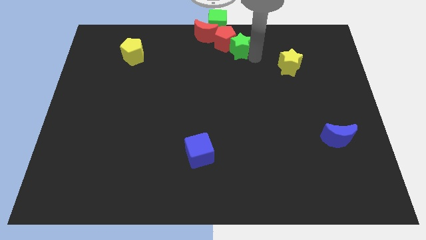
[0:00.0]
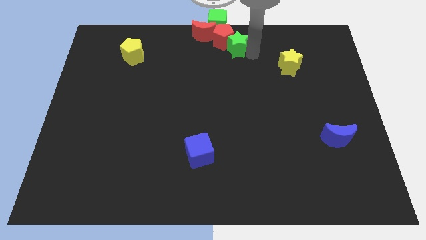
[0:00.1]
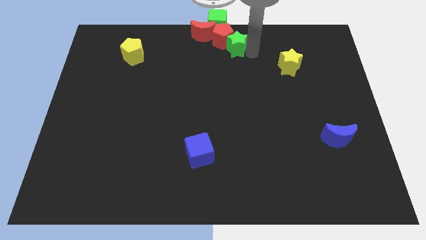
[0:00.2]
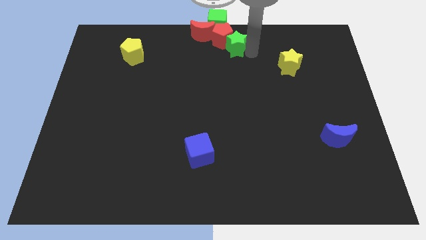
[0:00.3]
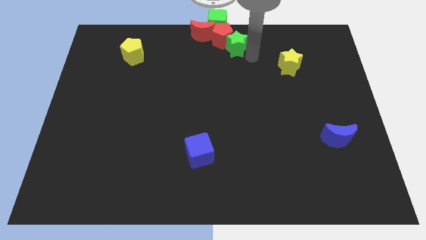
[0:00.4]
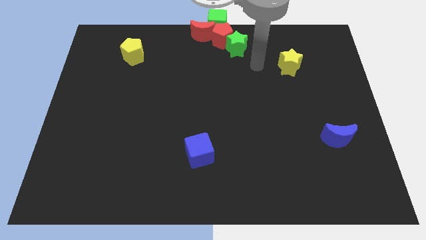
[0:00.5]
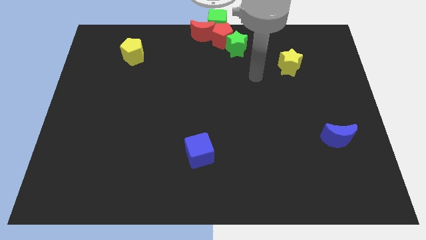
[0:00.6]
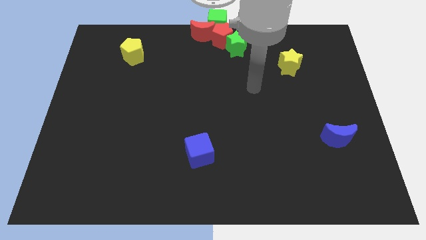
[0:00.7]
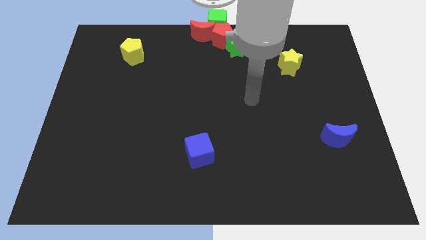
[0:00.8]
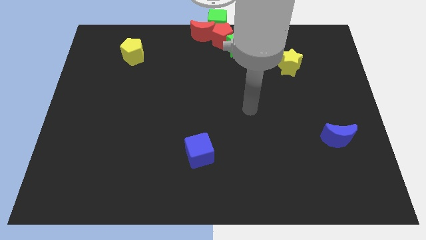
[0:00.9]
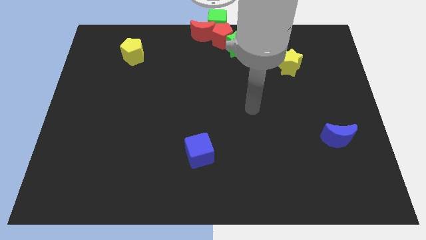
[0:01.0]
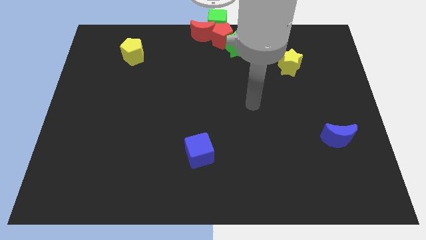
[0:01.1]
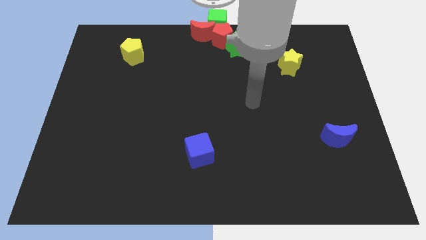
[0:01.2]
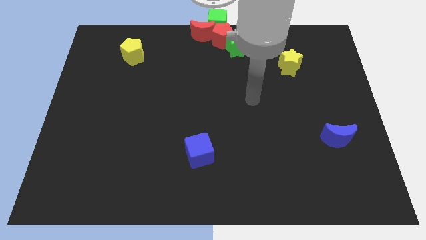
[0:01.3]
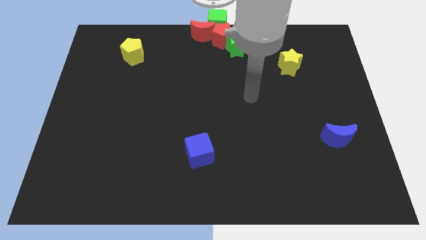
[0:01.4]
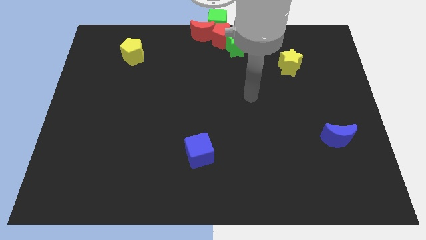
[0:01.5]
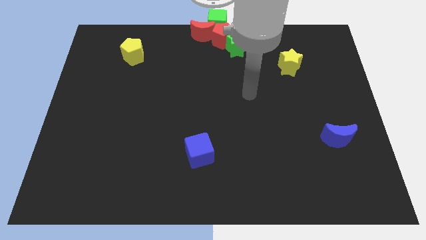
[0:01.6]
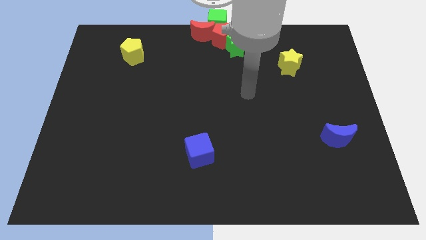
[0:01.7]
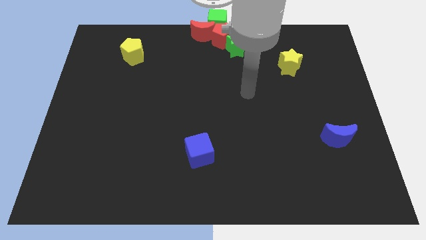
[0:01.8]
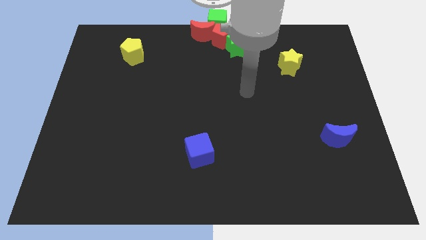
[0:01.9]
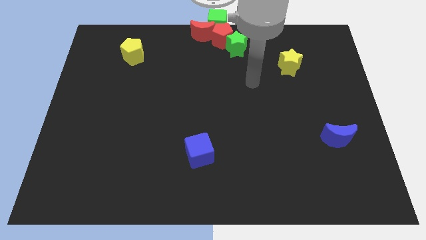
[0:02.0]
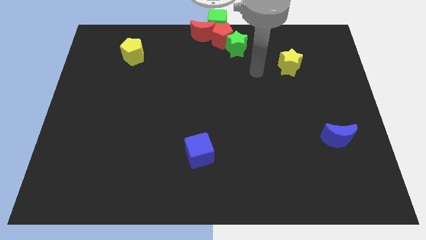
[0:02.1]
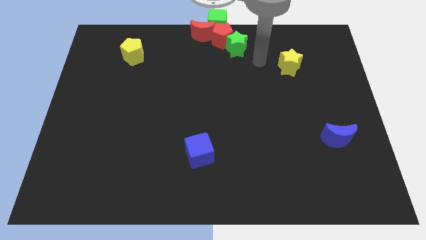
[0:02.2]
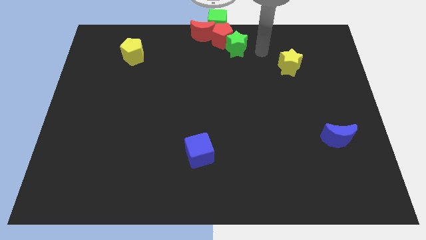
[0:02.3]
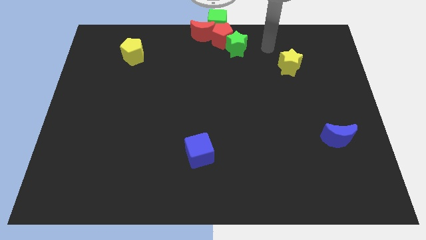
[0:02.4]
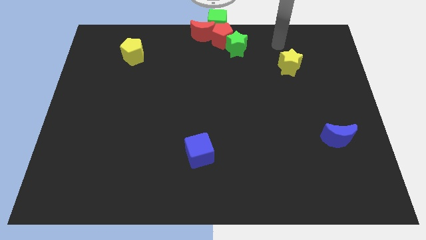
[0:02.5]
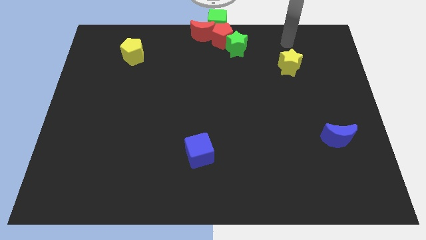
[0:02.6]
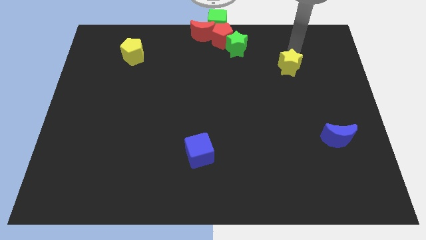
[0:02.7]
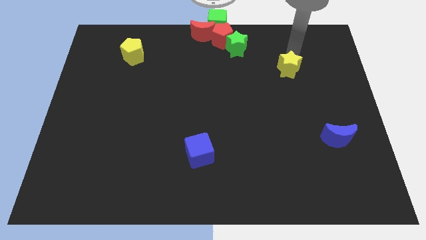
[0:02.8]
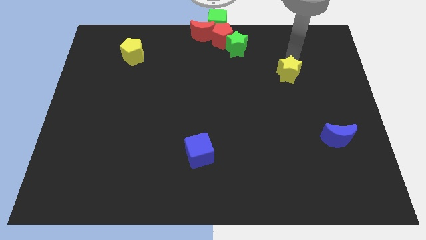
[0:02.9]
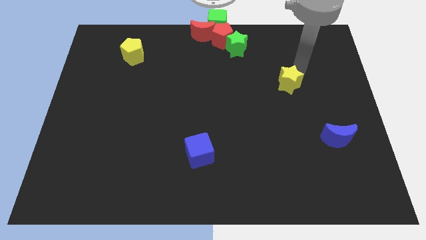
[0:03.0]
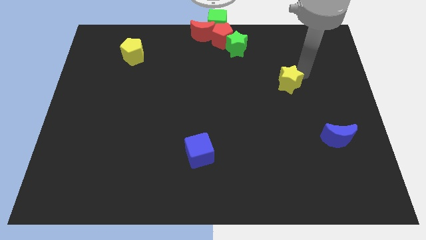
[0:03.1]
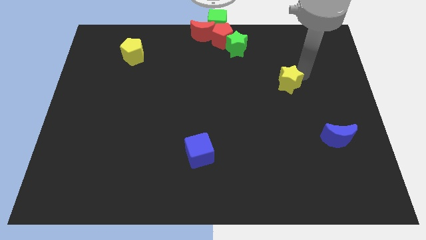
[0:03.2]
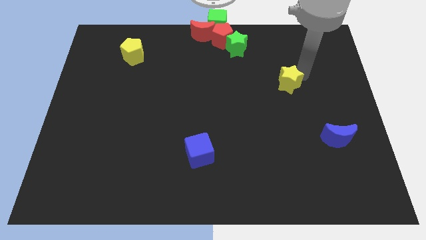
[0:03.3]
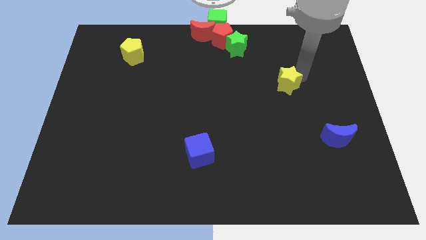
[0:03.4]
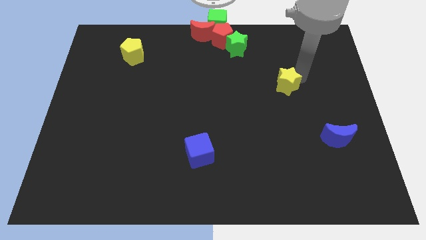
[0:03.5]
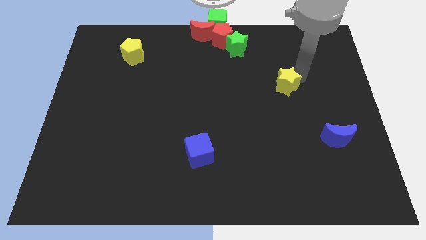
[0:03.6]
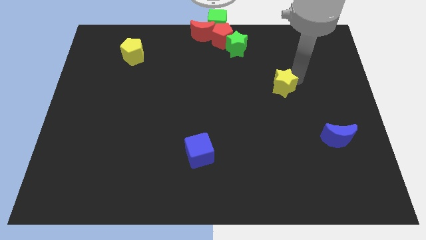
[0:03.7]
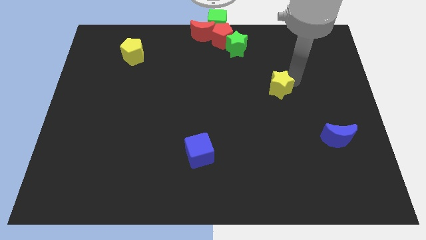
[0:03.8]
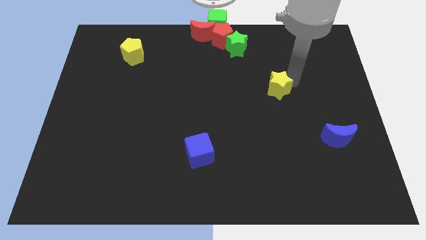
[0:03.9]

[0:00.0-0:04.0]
push the yellow star slightly down

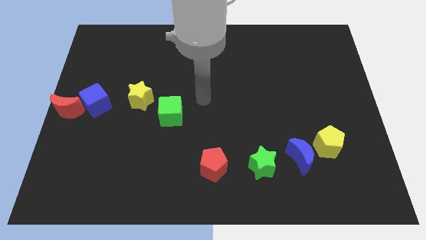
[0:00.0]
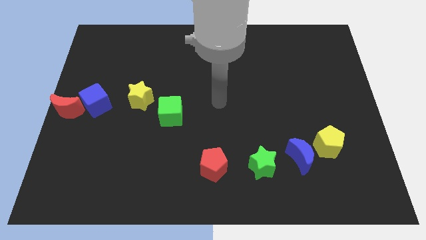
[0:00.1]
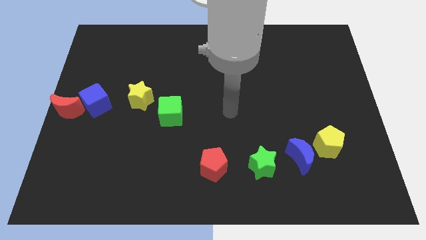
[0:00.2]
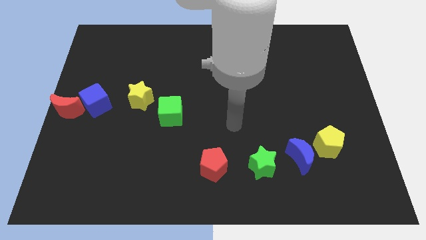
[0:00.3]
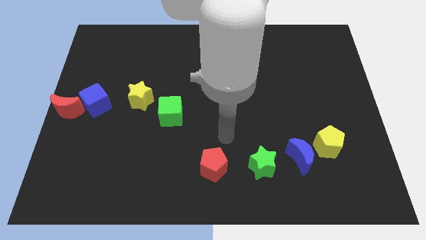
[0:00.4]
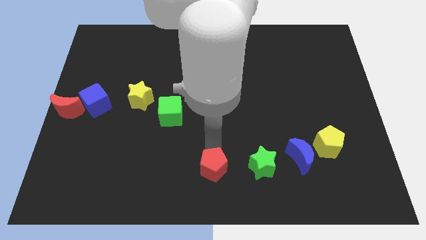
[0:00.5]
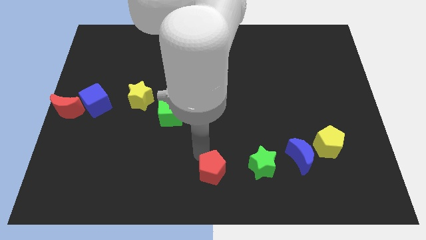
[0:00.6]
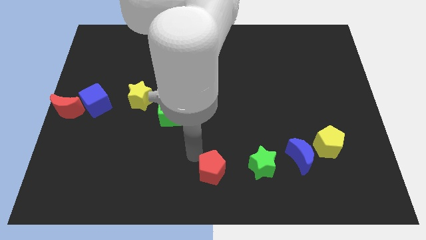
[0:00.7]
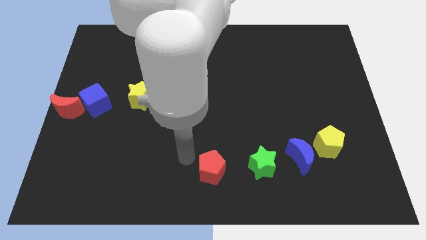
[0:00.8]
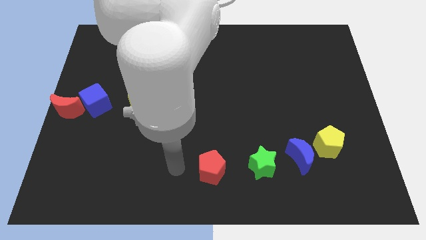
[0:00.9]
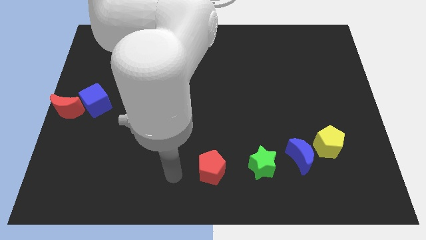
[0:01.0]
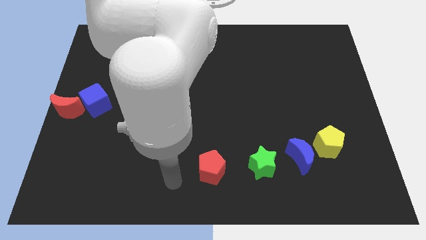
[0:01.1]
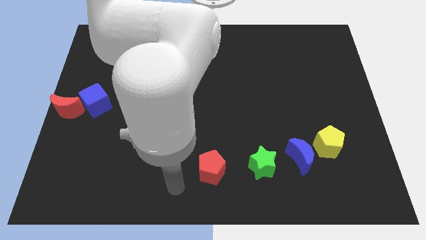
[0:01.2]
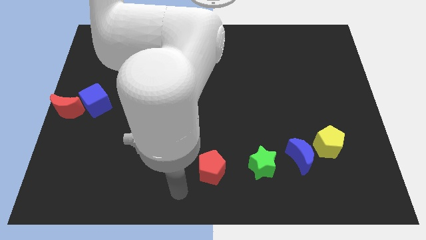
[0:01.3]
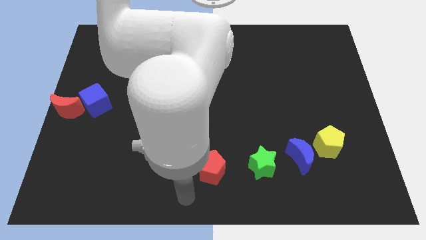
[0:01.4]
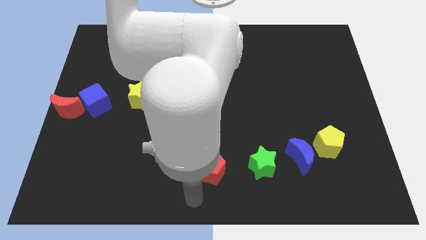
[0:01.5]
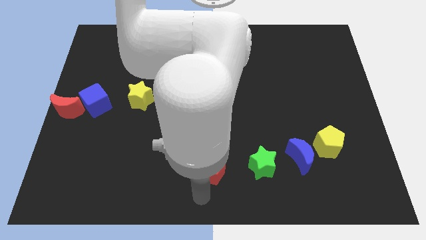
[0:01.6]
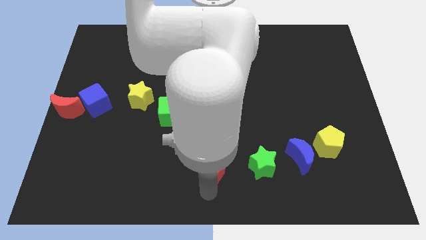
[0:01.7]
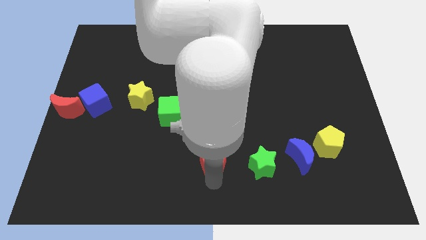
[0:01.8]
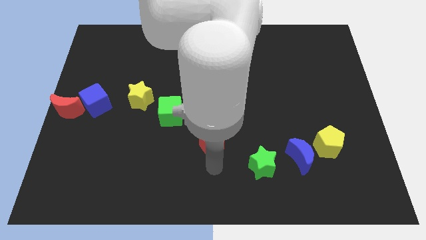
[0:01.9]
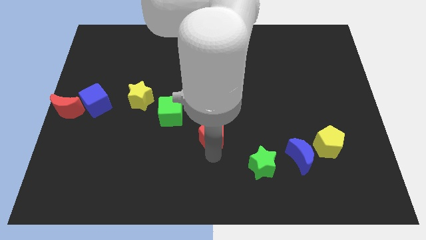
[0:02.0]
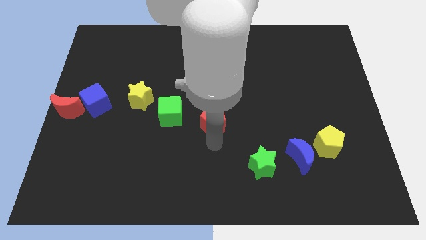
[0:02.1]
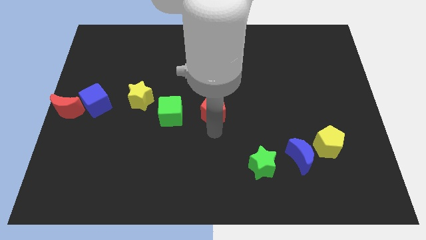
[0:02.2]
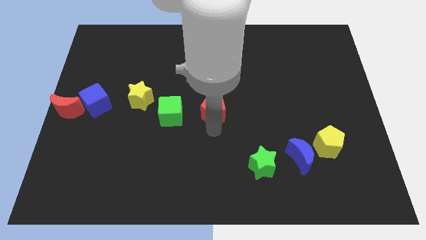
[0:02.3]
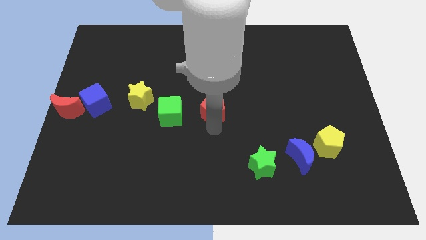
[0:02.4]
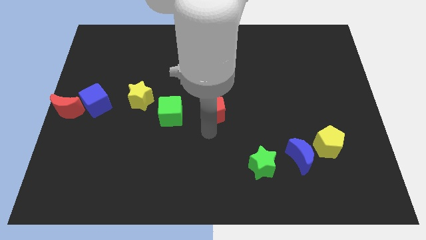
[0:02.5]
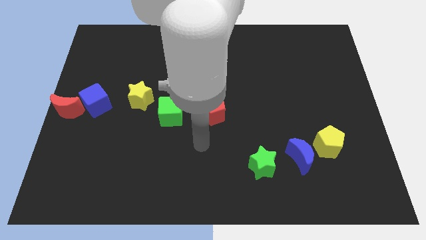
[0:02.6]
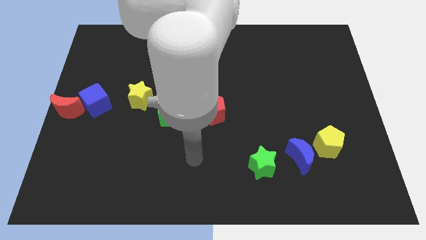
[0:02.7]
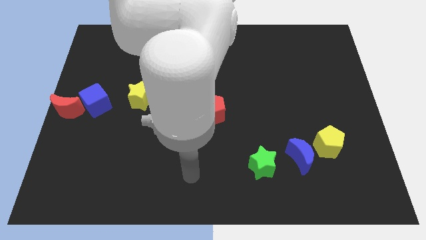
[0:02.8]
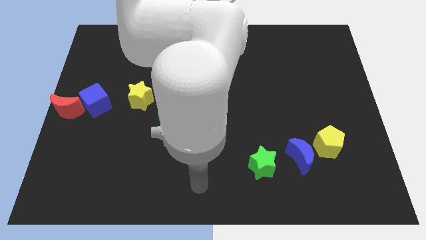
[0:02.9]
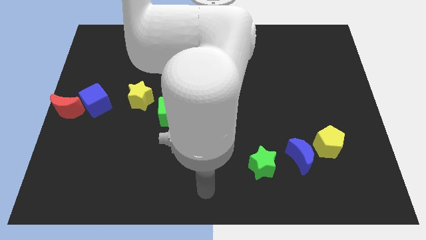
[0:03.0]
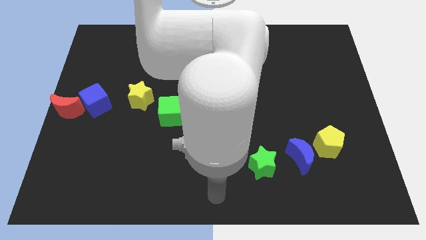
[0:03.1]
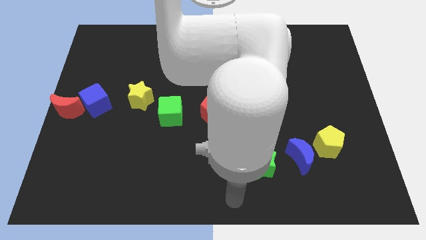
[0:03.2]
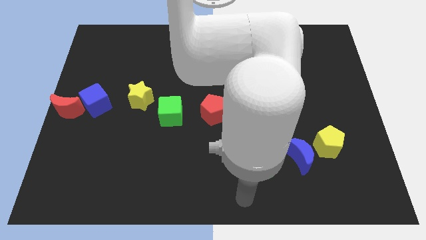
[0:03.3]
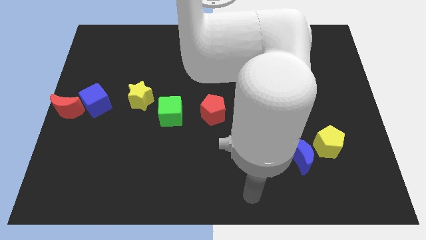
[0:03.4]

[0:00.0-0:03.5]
place the red pentagon right to the green cube

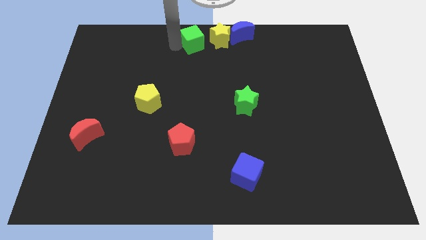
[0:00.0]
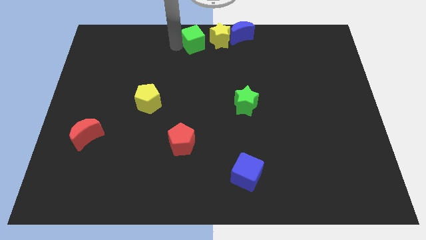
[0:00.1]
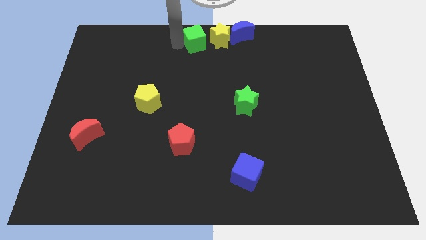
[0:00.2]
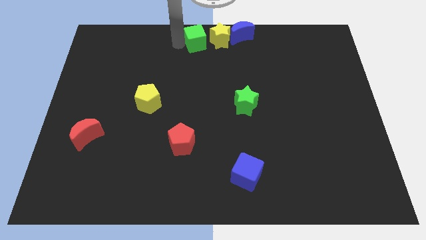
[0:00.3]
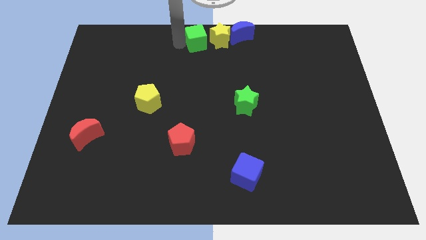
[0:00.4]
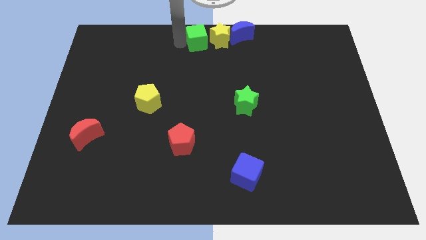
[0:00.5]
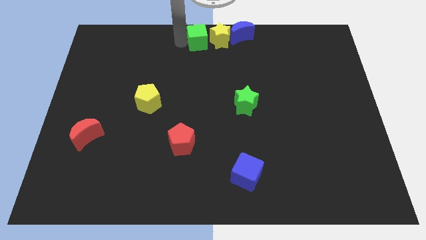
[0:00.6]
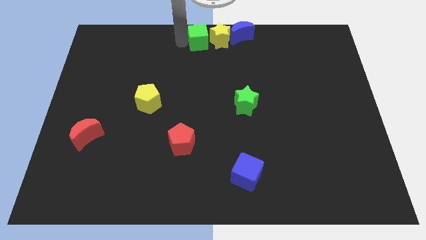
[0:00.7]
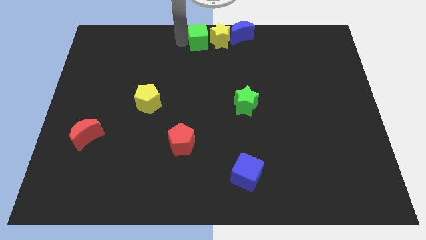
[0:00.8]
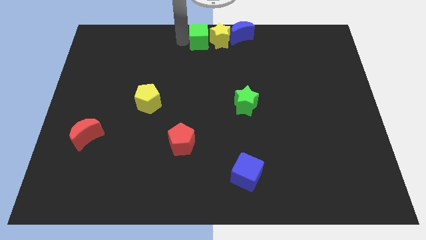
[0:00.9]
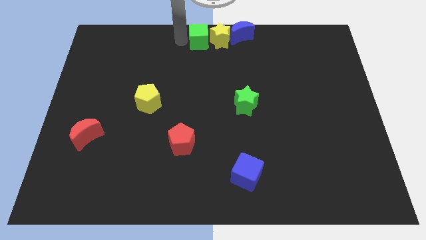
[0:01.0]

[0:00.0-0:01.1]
place green cube left to yellow star

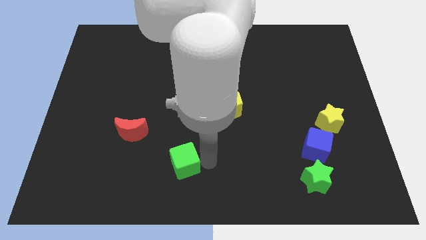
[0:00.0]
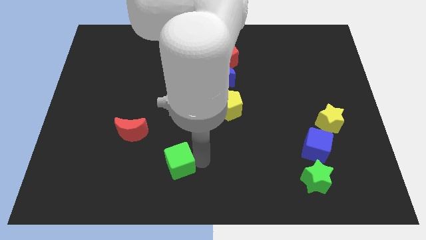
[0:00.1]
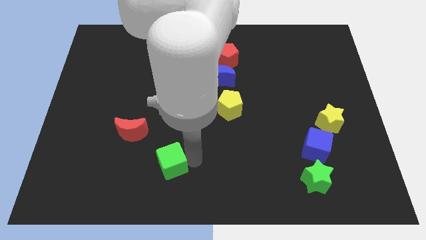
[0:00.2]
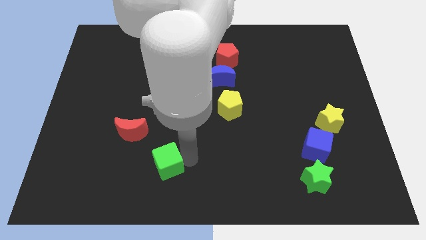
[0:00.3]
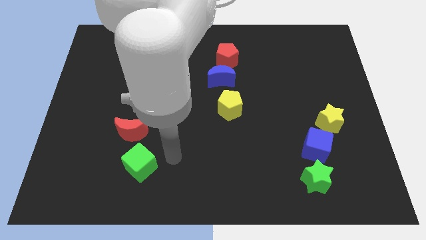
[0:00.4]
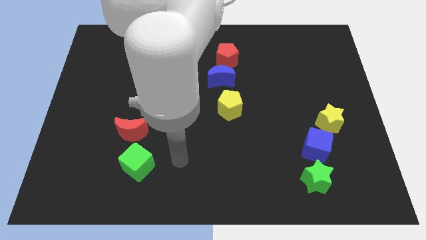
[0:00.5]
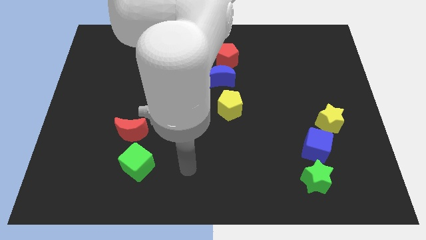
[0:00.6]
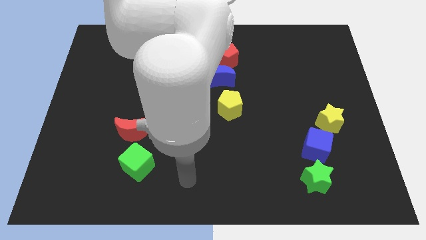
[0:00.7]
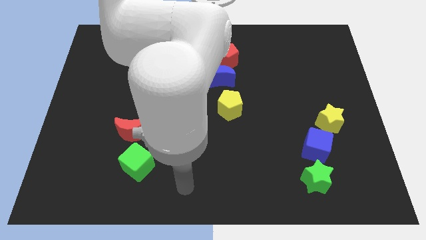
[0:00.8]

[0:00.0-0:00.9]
push the green cube towards the red crescent
